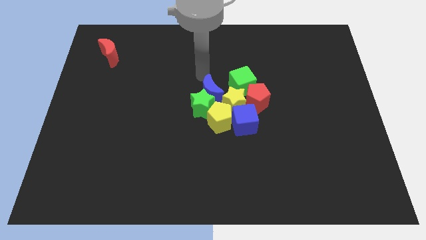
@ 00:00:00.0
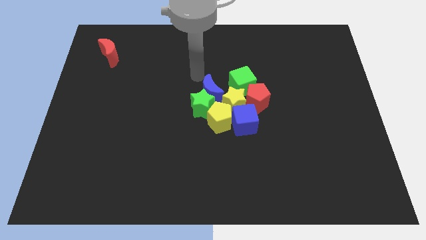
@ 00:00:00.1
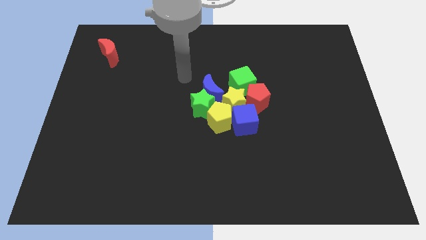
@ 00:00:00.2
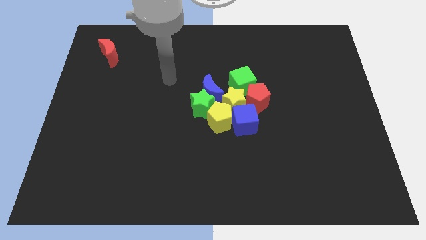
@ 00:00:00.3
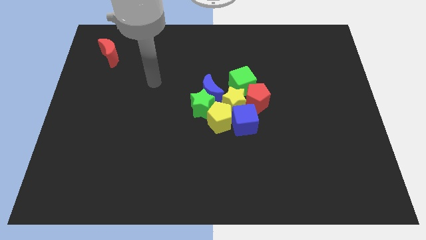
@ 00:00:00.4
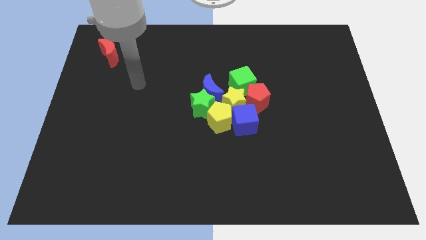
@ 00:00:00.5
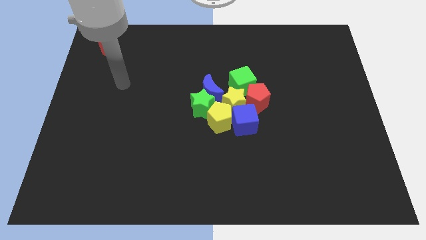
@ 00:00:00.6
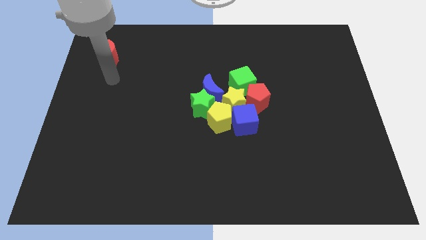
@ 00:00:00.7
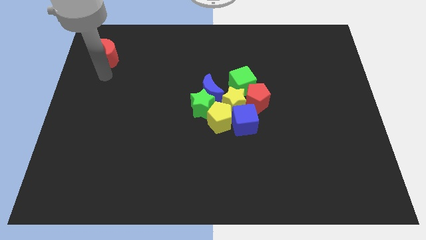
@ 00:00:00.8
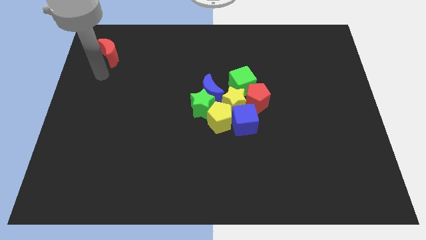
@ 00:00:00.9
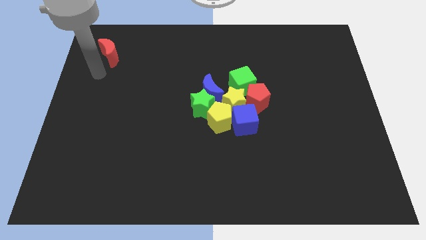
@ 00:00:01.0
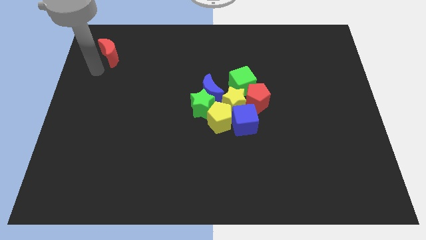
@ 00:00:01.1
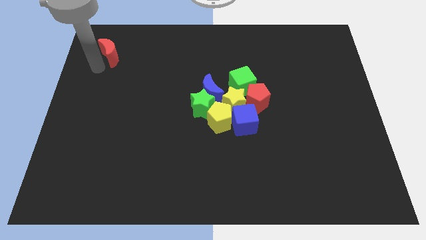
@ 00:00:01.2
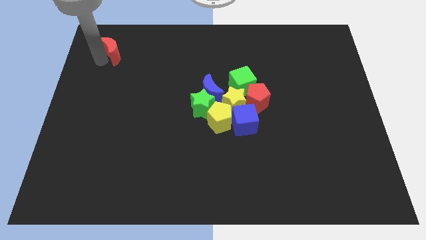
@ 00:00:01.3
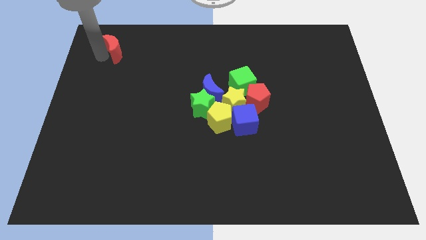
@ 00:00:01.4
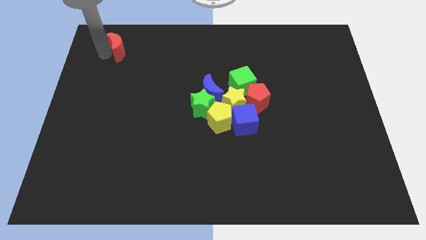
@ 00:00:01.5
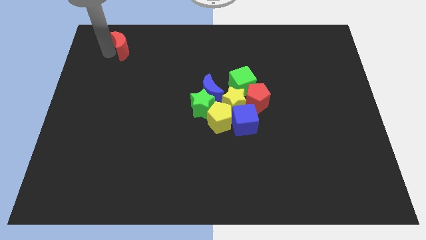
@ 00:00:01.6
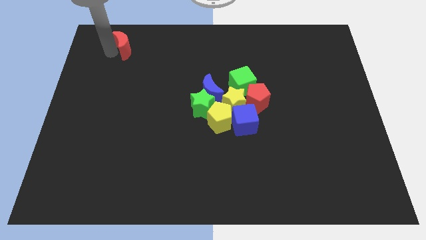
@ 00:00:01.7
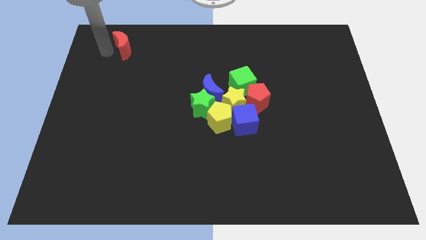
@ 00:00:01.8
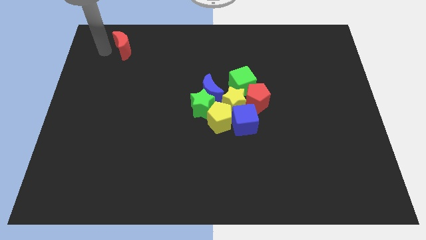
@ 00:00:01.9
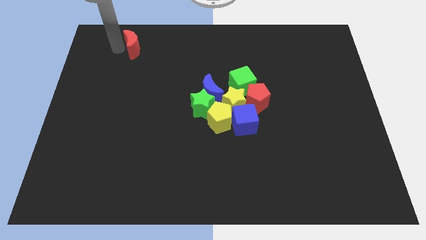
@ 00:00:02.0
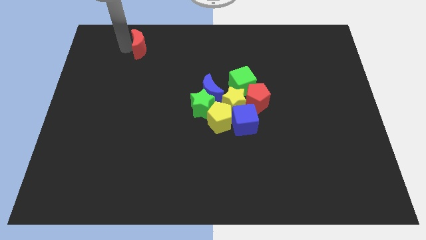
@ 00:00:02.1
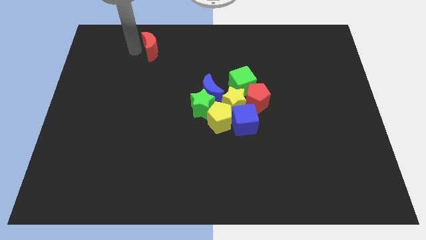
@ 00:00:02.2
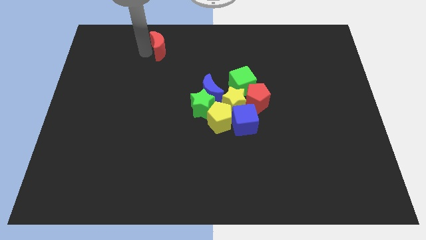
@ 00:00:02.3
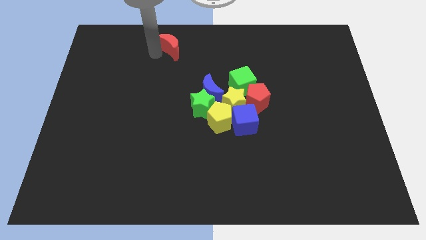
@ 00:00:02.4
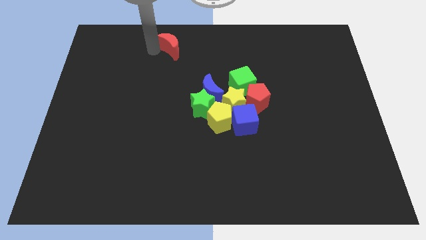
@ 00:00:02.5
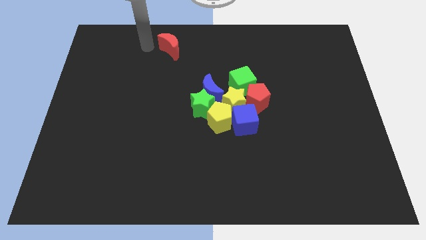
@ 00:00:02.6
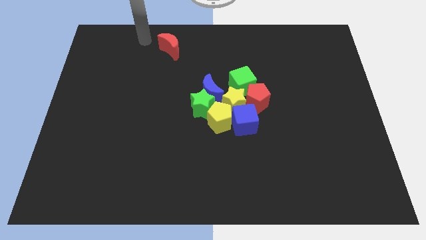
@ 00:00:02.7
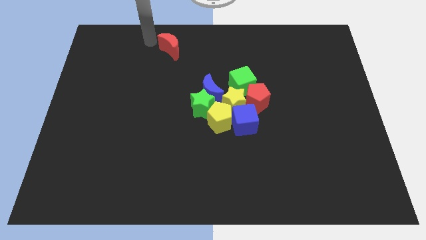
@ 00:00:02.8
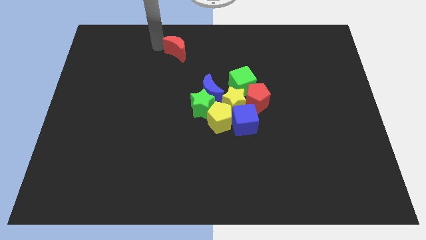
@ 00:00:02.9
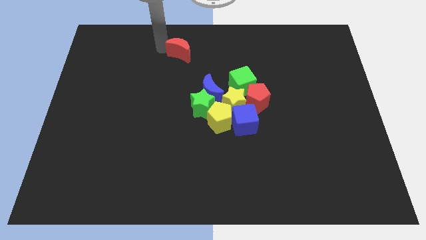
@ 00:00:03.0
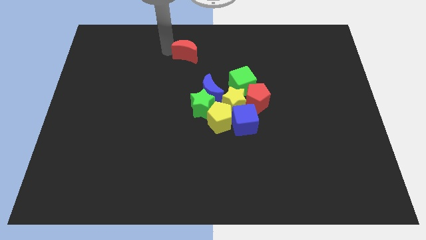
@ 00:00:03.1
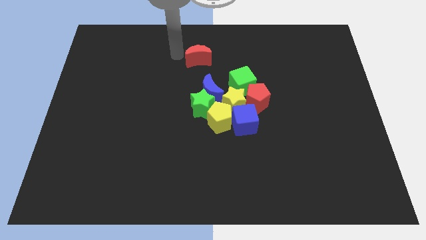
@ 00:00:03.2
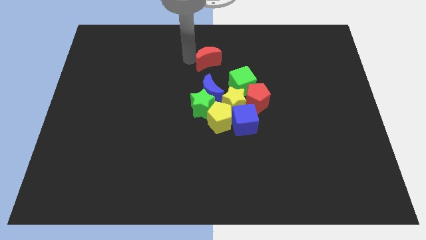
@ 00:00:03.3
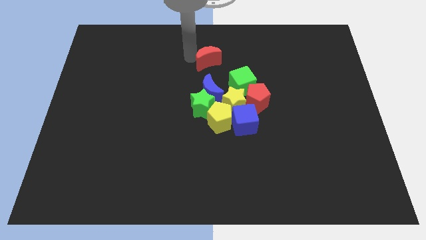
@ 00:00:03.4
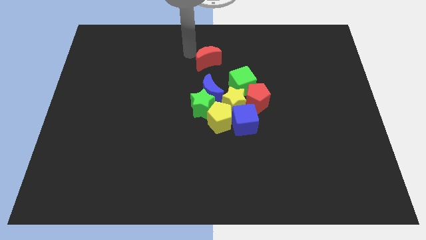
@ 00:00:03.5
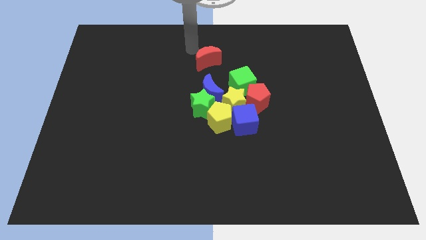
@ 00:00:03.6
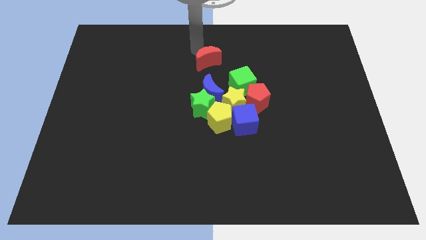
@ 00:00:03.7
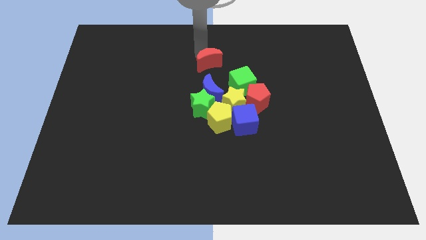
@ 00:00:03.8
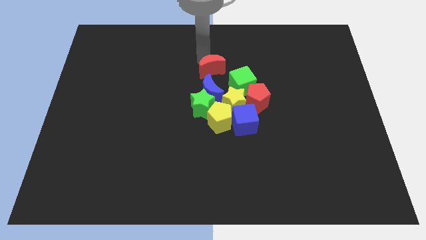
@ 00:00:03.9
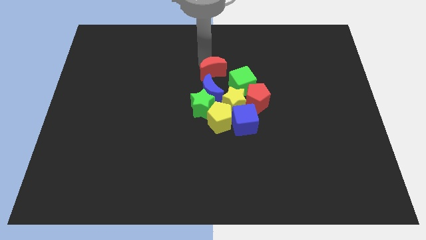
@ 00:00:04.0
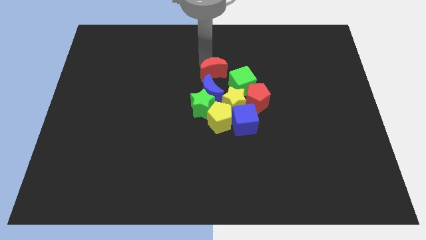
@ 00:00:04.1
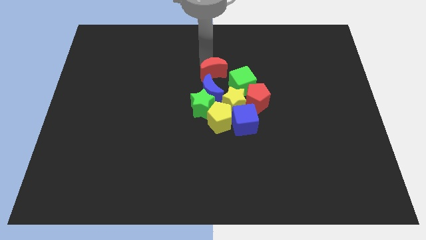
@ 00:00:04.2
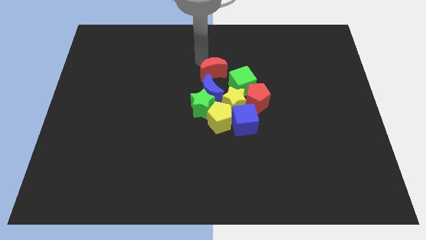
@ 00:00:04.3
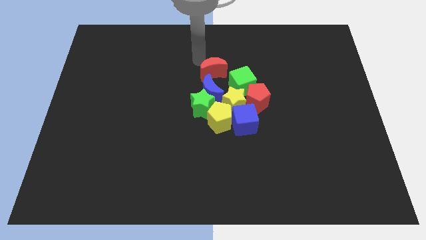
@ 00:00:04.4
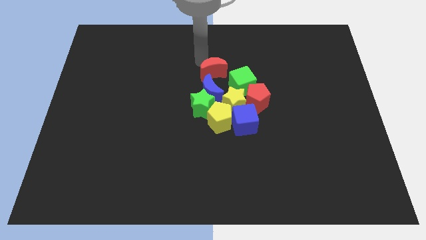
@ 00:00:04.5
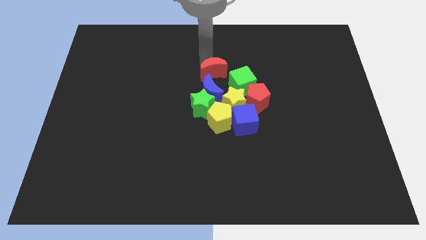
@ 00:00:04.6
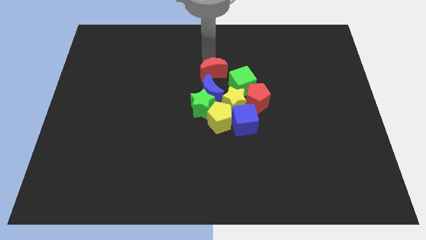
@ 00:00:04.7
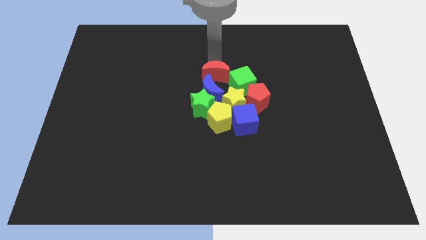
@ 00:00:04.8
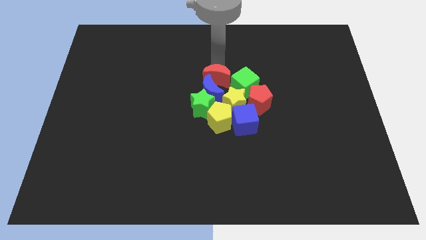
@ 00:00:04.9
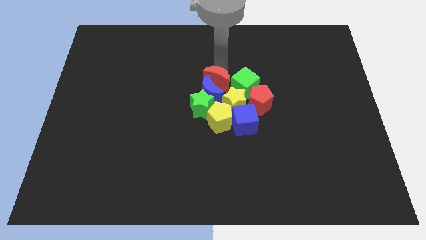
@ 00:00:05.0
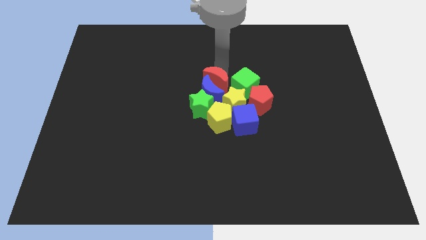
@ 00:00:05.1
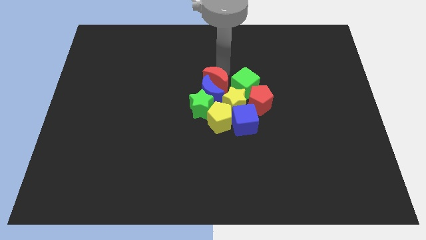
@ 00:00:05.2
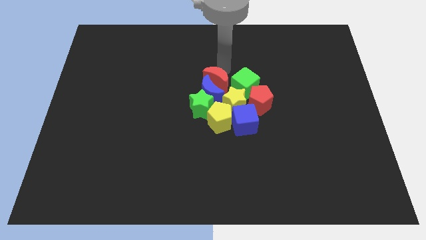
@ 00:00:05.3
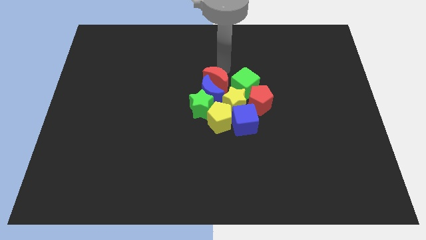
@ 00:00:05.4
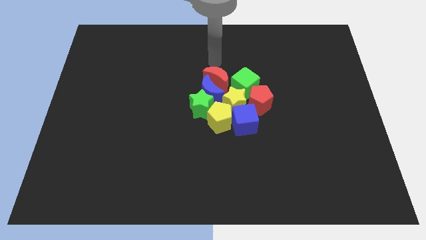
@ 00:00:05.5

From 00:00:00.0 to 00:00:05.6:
move the red crescent towards the blue crescent

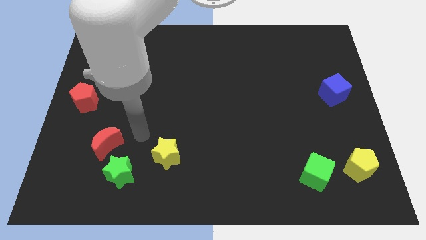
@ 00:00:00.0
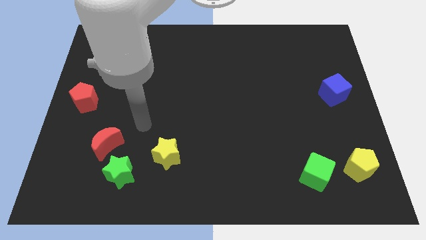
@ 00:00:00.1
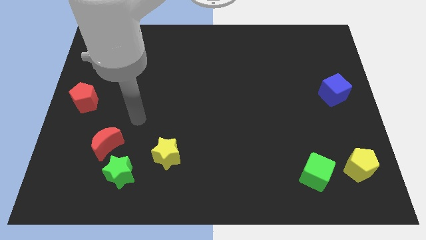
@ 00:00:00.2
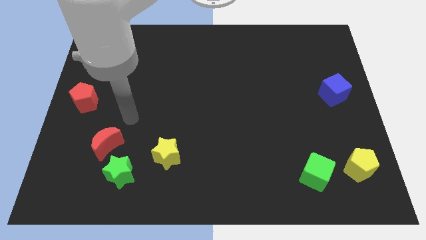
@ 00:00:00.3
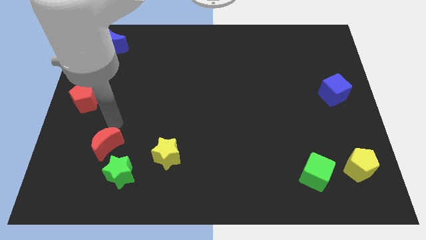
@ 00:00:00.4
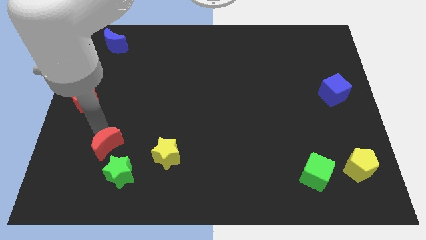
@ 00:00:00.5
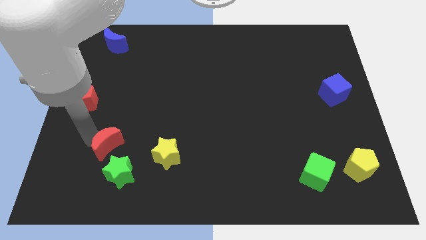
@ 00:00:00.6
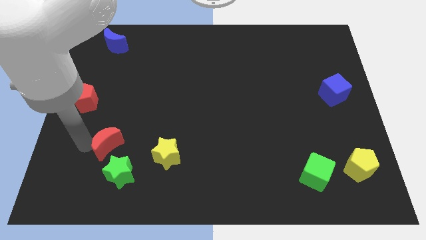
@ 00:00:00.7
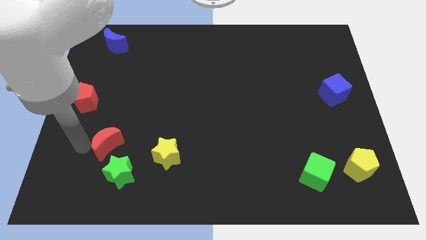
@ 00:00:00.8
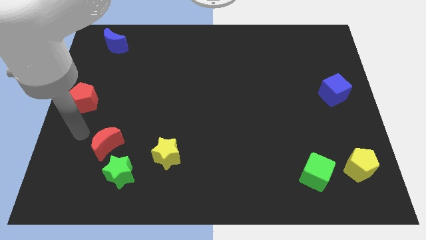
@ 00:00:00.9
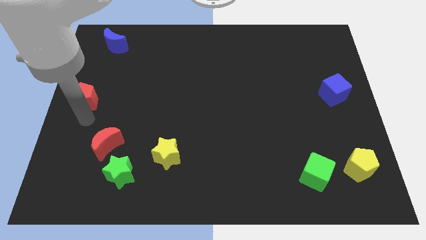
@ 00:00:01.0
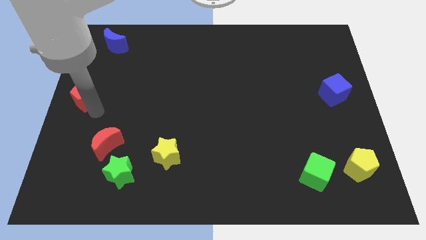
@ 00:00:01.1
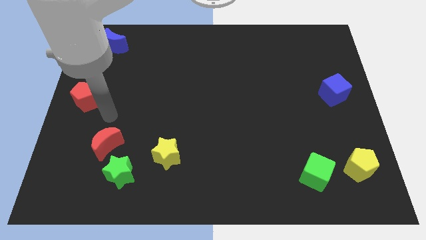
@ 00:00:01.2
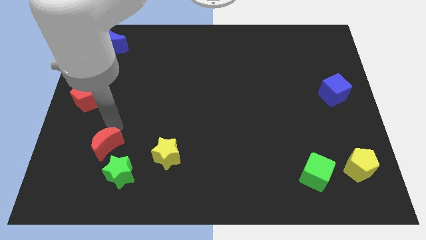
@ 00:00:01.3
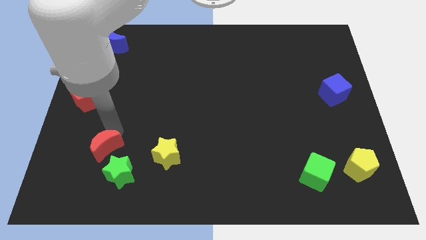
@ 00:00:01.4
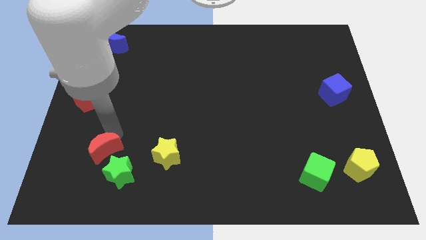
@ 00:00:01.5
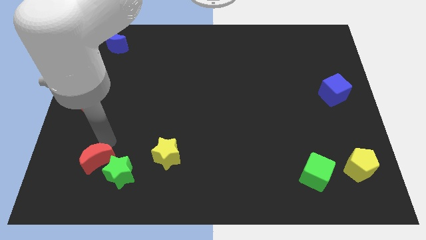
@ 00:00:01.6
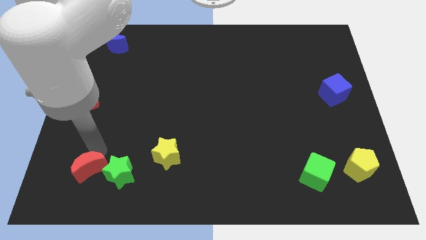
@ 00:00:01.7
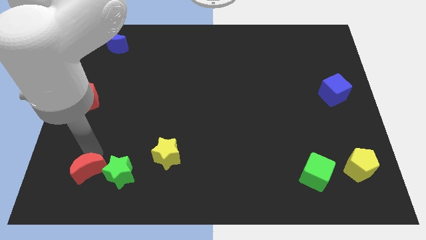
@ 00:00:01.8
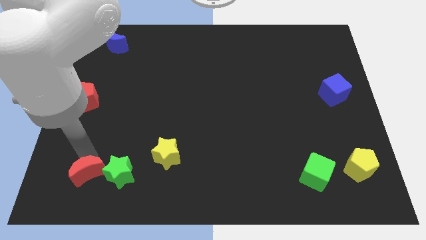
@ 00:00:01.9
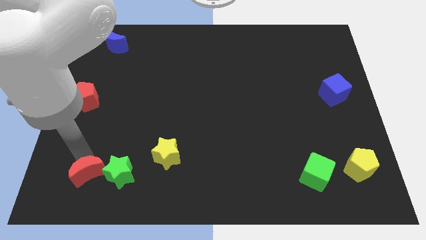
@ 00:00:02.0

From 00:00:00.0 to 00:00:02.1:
push the red crescent to the left of the green star

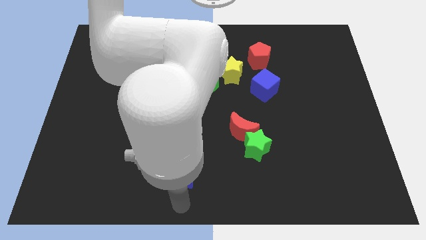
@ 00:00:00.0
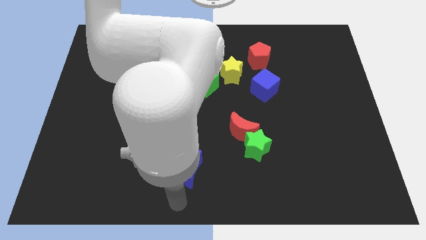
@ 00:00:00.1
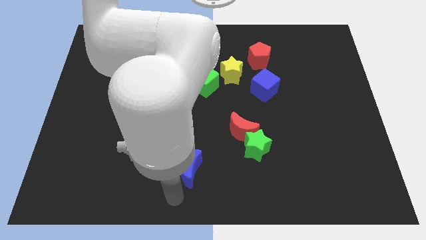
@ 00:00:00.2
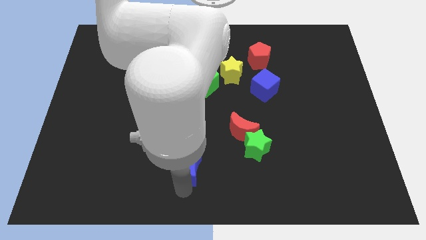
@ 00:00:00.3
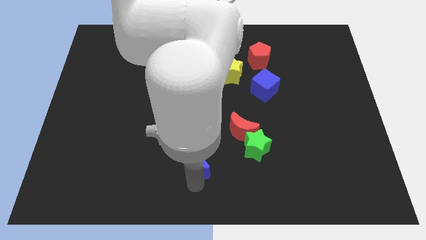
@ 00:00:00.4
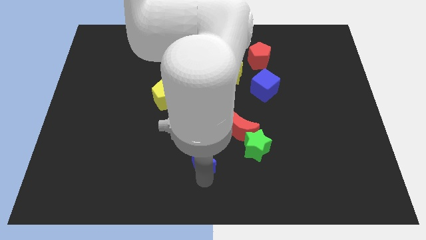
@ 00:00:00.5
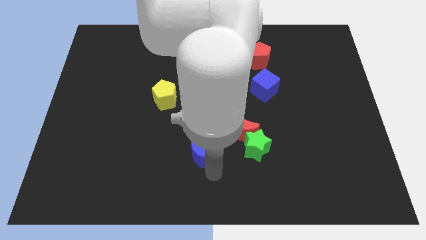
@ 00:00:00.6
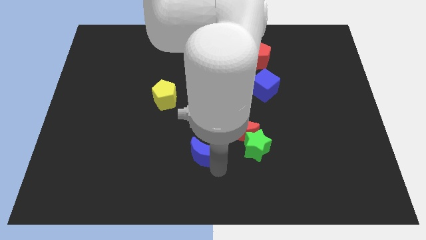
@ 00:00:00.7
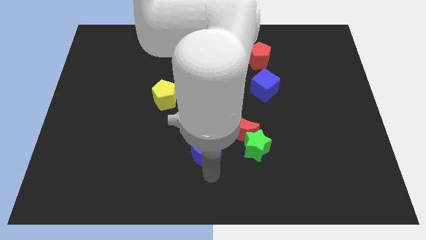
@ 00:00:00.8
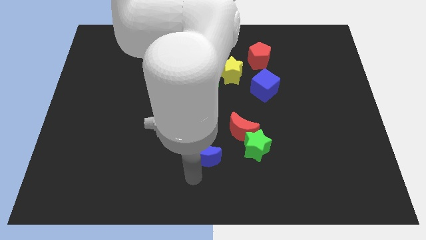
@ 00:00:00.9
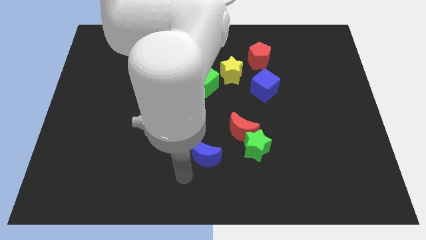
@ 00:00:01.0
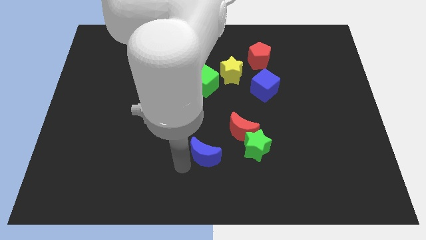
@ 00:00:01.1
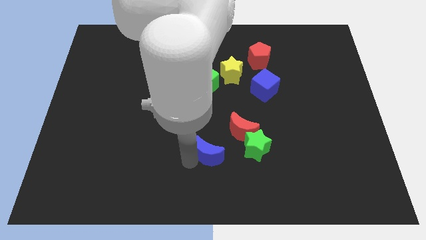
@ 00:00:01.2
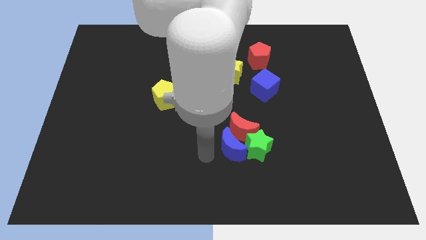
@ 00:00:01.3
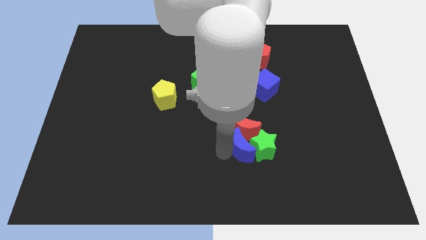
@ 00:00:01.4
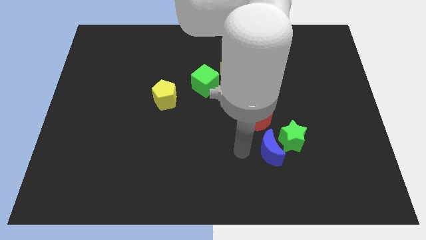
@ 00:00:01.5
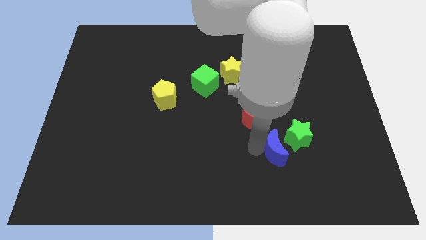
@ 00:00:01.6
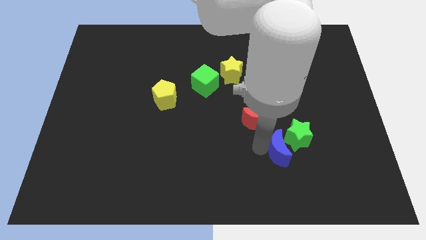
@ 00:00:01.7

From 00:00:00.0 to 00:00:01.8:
push the blue moon into the green star
